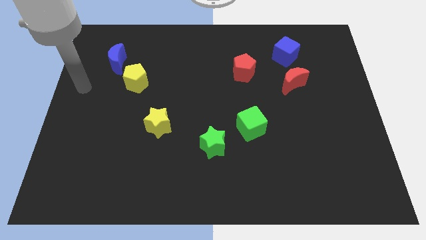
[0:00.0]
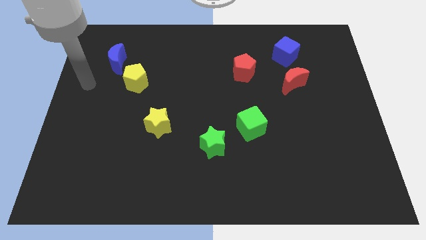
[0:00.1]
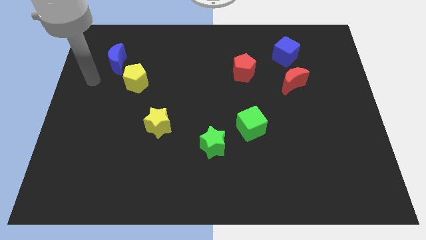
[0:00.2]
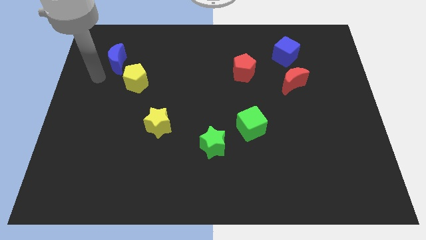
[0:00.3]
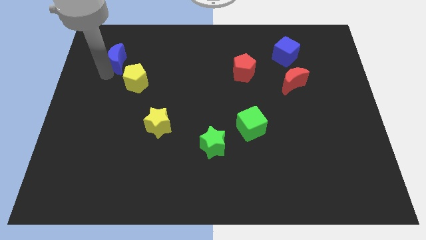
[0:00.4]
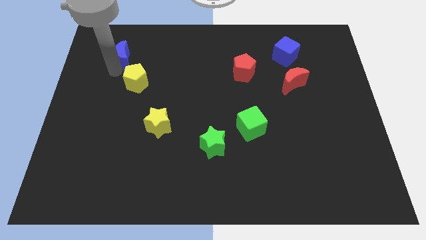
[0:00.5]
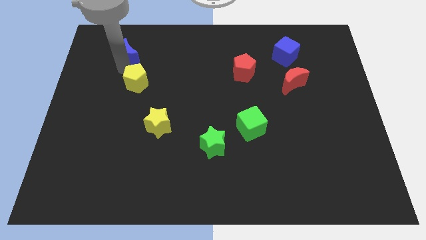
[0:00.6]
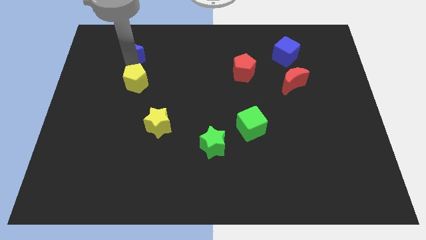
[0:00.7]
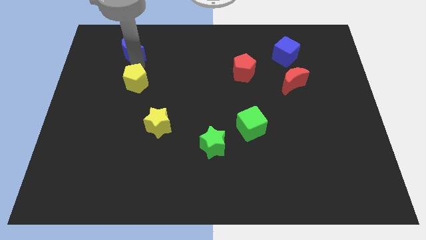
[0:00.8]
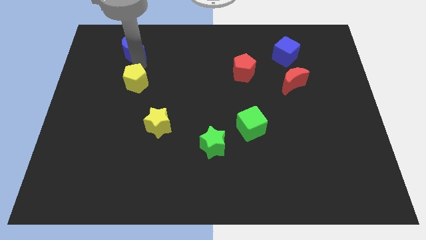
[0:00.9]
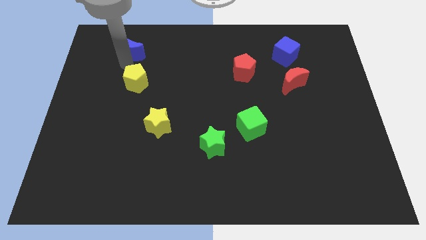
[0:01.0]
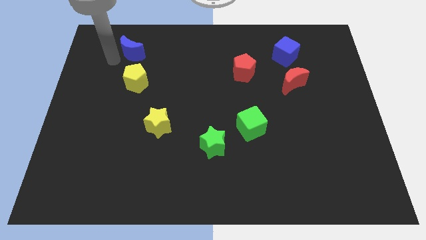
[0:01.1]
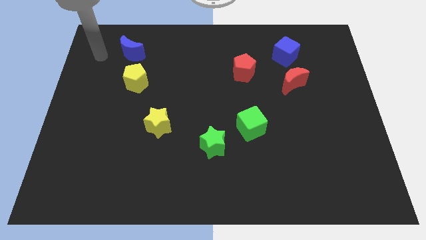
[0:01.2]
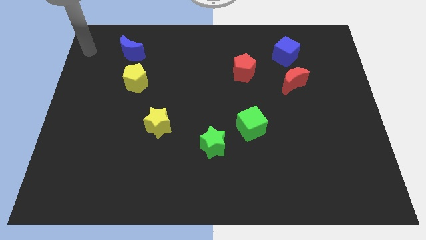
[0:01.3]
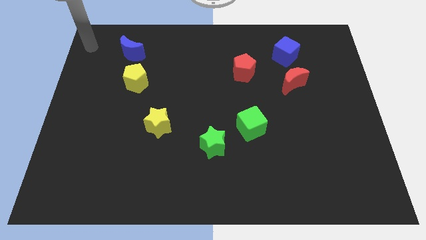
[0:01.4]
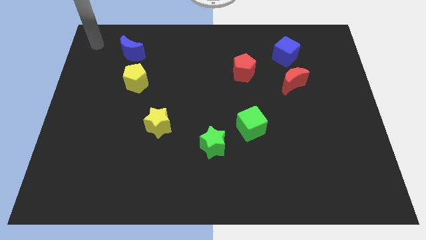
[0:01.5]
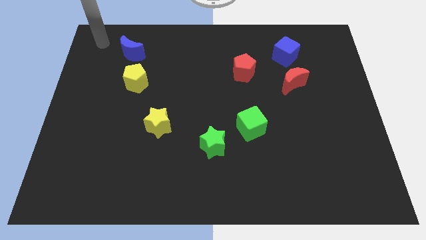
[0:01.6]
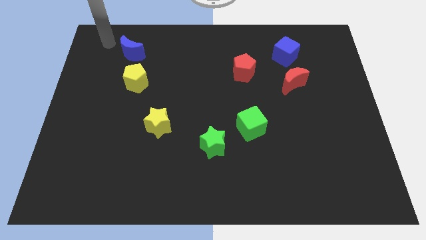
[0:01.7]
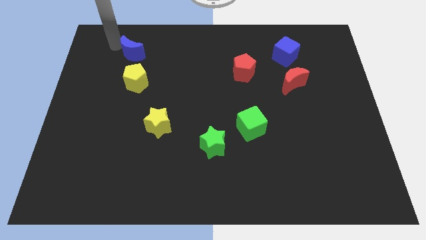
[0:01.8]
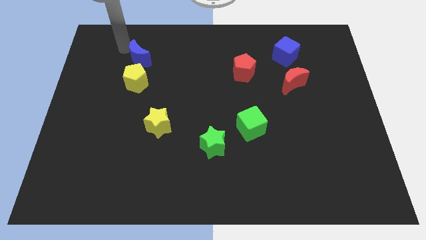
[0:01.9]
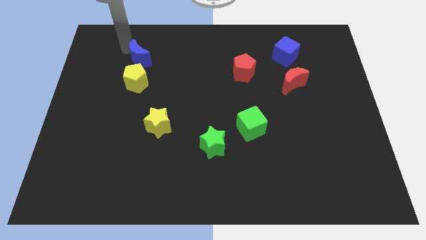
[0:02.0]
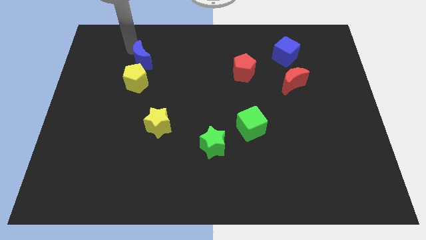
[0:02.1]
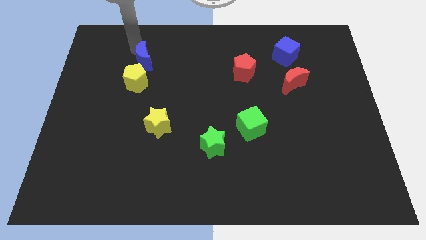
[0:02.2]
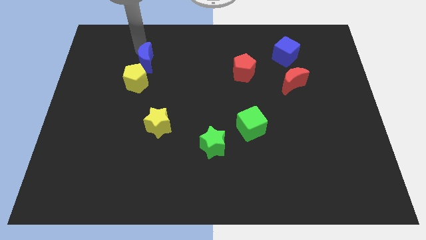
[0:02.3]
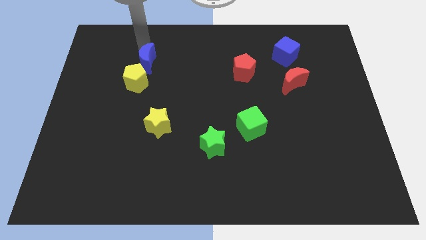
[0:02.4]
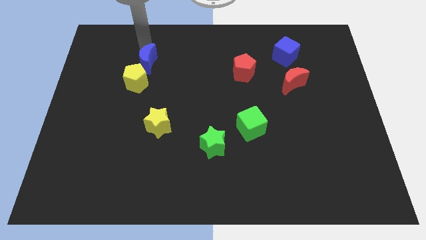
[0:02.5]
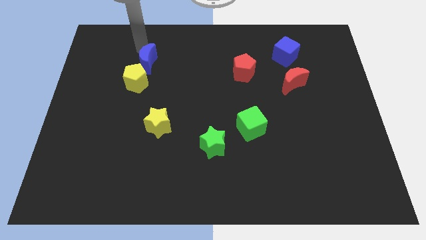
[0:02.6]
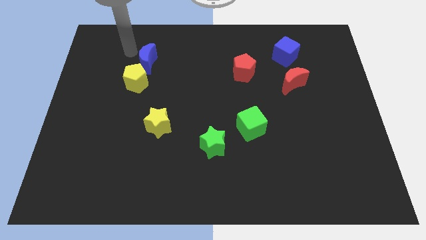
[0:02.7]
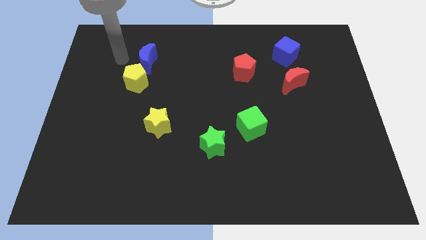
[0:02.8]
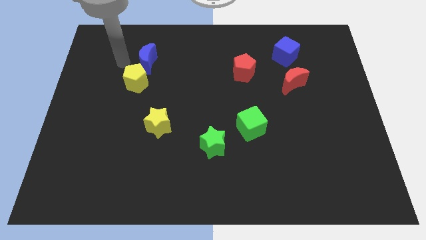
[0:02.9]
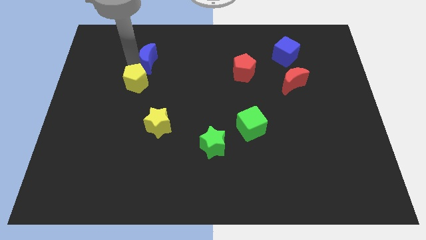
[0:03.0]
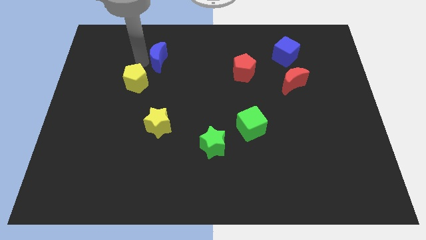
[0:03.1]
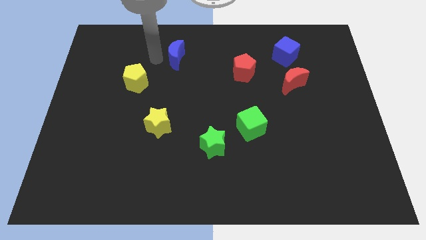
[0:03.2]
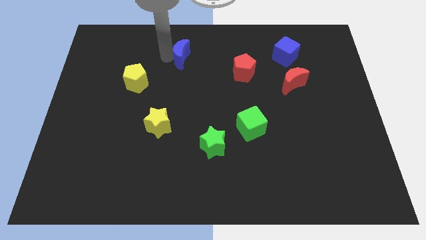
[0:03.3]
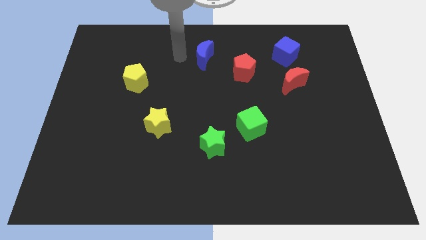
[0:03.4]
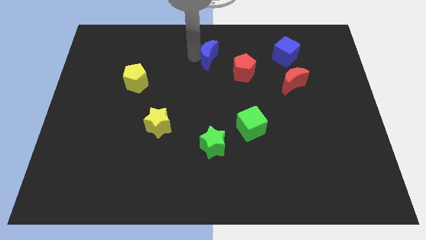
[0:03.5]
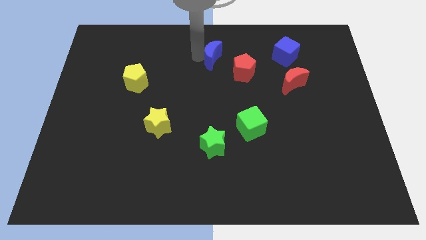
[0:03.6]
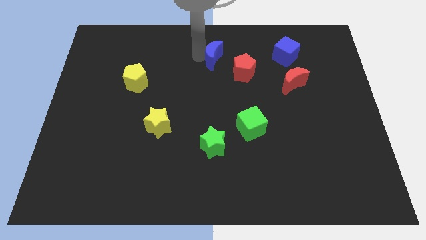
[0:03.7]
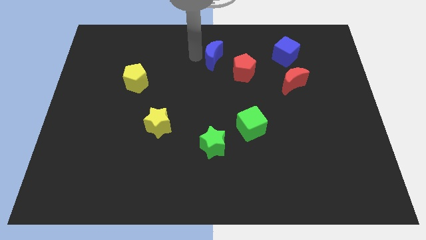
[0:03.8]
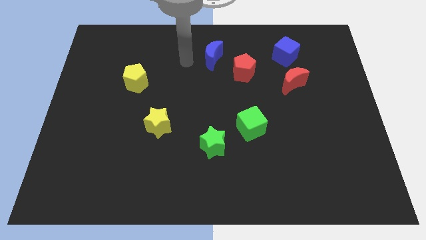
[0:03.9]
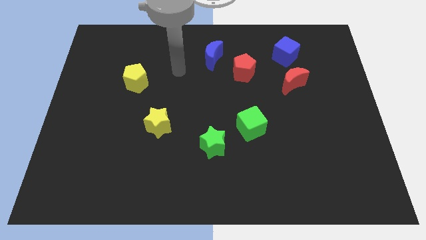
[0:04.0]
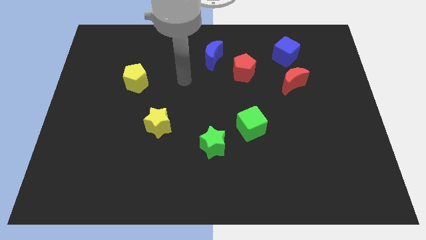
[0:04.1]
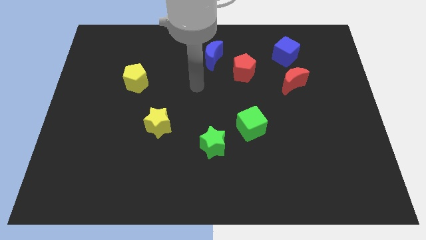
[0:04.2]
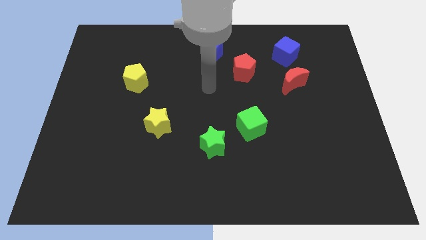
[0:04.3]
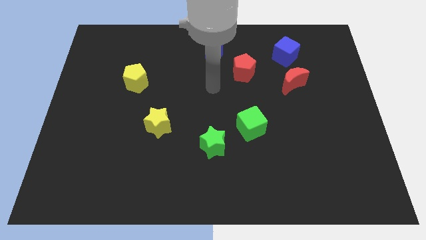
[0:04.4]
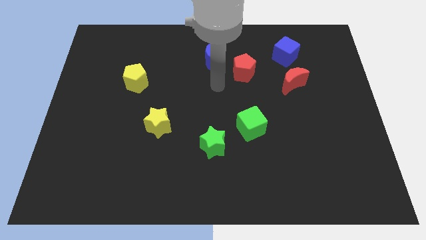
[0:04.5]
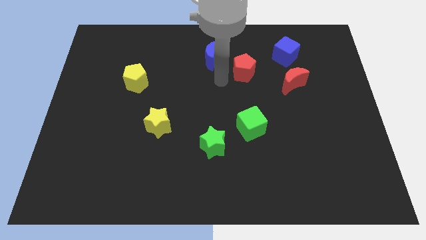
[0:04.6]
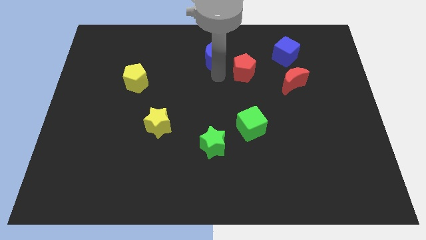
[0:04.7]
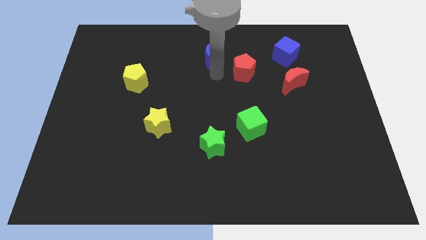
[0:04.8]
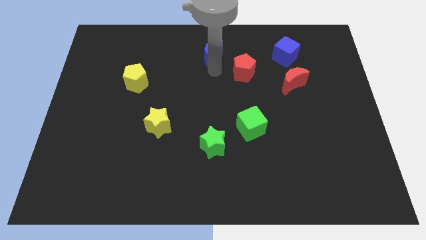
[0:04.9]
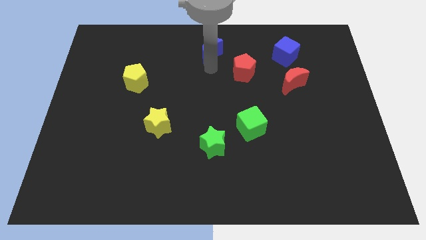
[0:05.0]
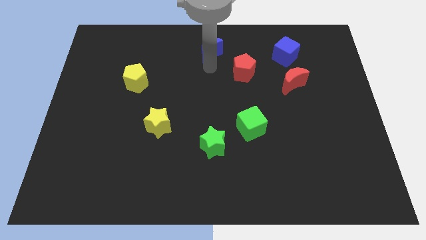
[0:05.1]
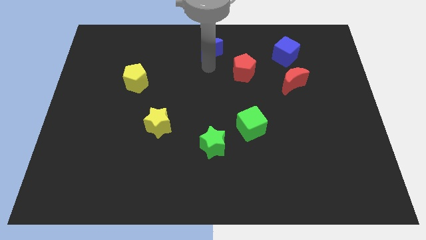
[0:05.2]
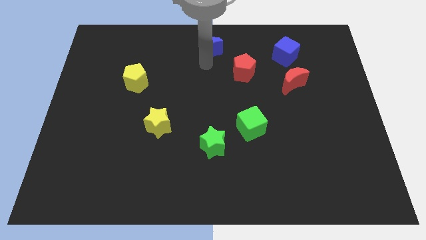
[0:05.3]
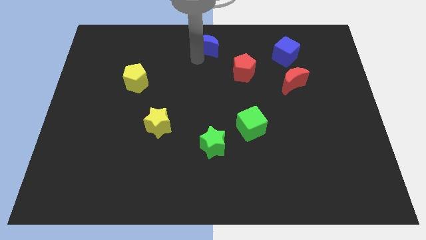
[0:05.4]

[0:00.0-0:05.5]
place the blue moon left to the blue cube

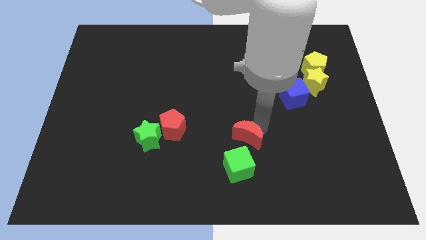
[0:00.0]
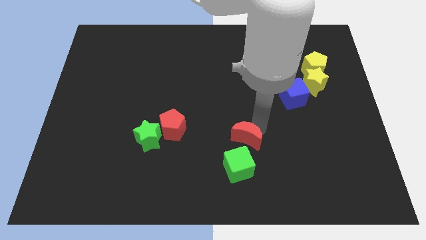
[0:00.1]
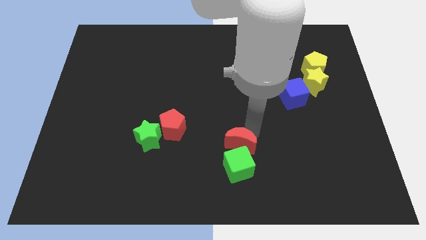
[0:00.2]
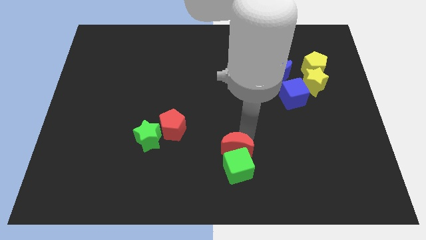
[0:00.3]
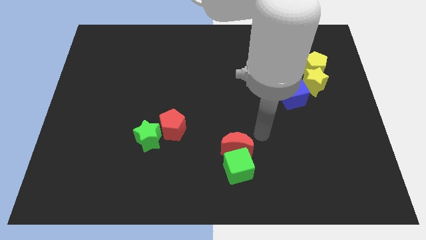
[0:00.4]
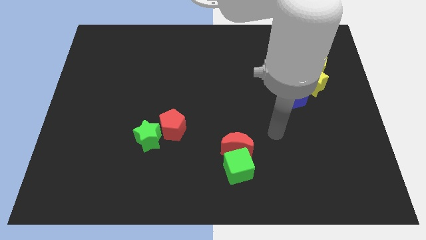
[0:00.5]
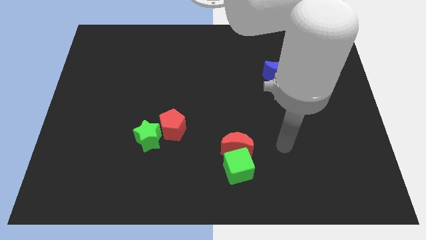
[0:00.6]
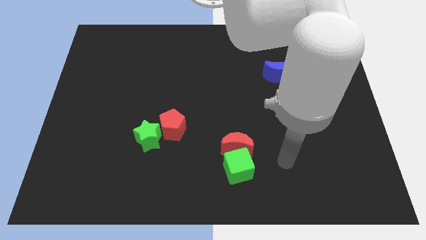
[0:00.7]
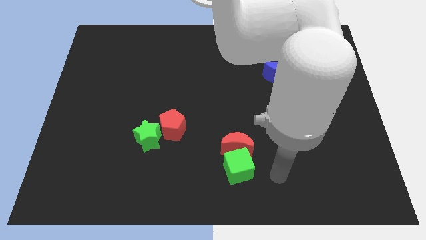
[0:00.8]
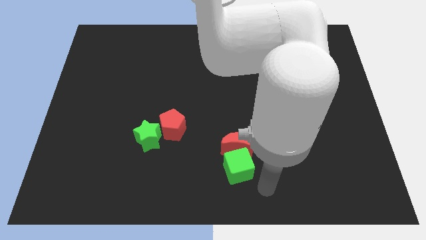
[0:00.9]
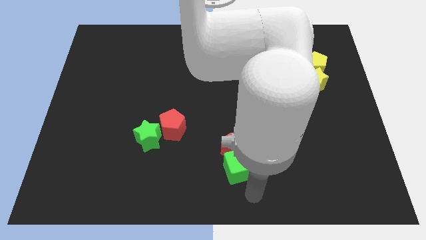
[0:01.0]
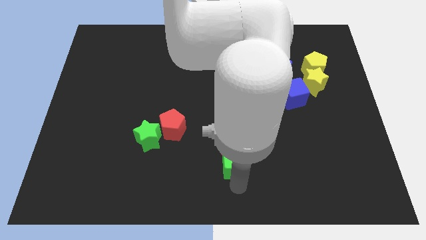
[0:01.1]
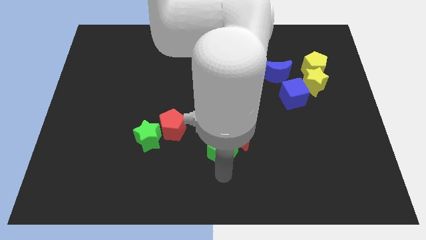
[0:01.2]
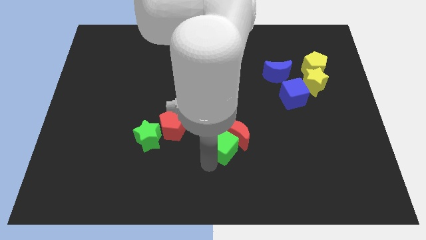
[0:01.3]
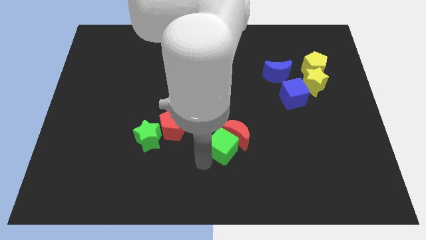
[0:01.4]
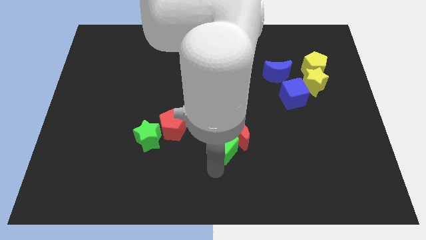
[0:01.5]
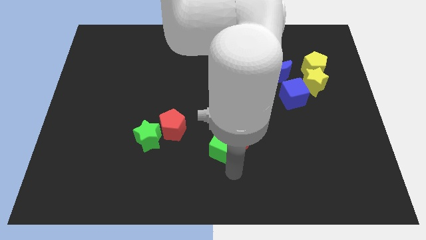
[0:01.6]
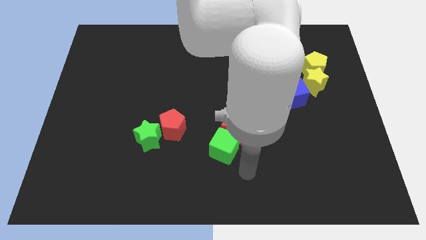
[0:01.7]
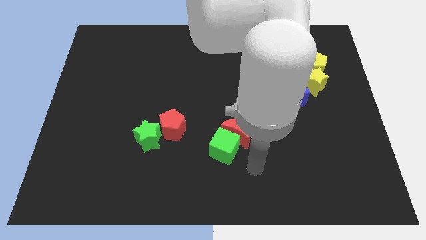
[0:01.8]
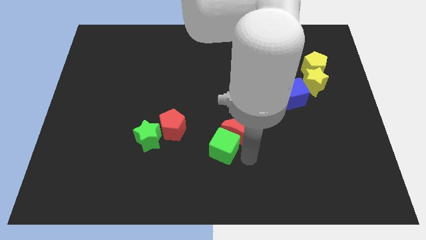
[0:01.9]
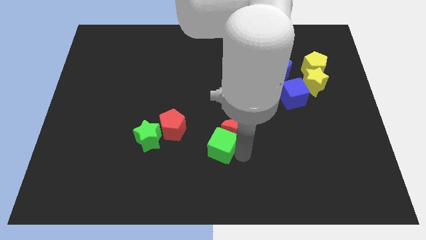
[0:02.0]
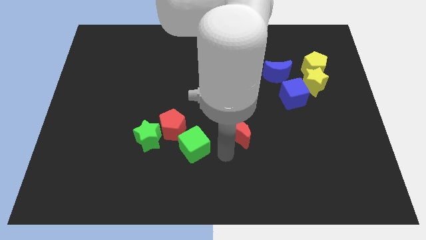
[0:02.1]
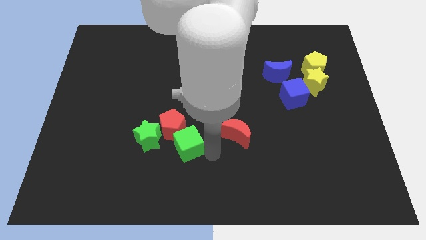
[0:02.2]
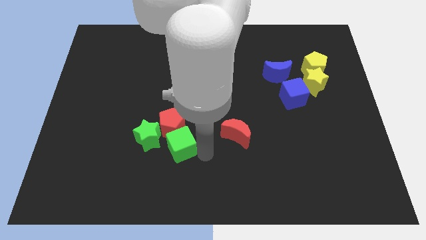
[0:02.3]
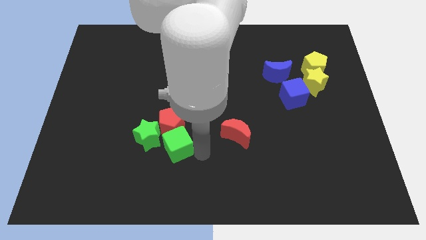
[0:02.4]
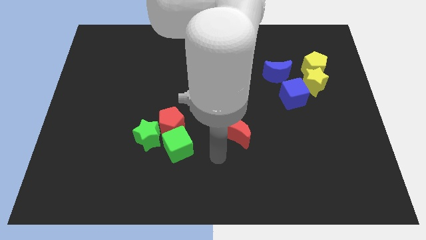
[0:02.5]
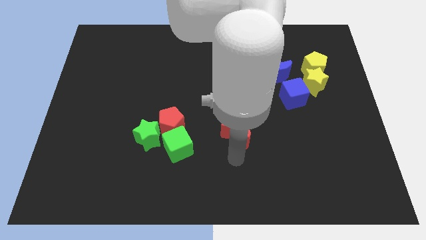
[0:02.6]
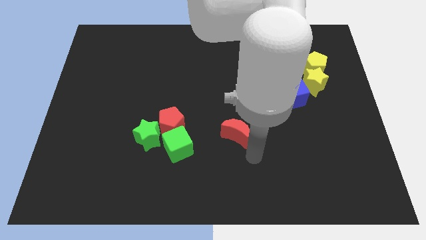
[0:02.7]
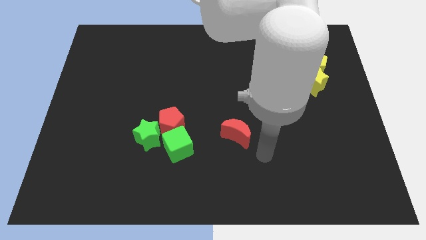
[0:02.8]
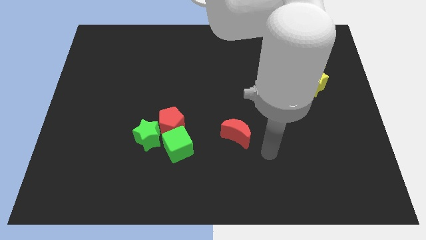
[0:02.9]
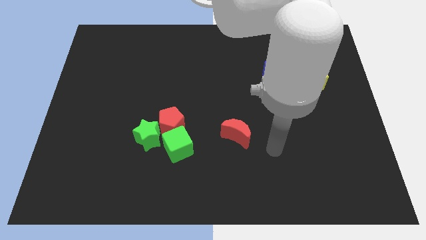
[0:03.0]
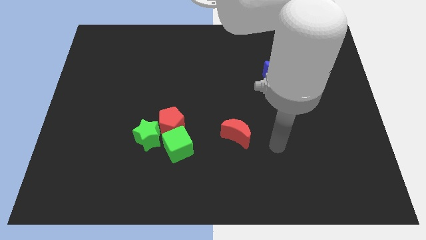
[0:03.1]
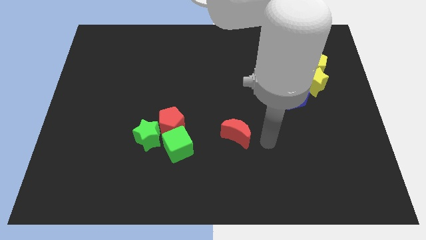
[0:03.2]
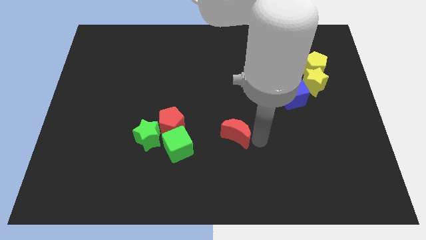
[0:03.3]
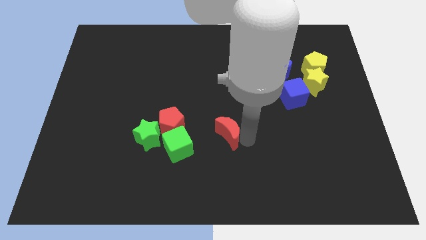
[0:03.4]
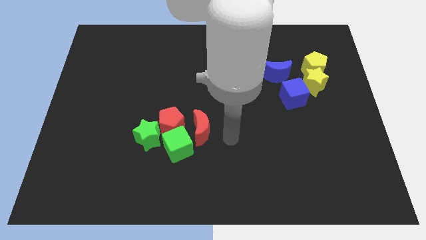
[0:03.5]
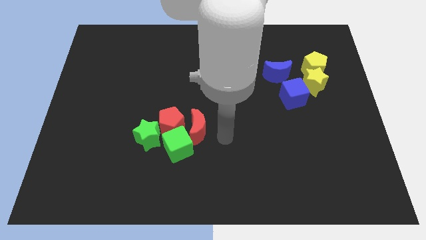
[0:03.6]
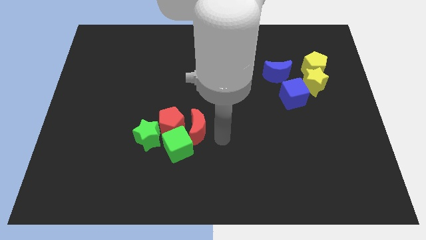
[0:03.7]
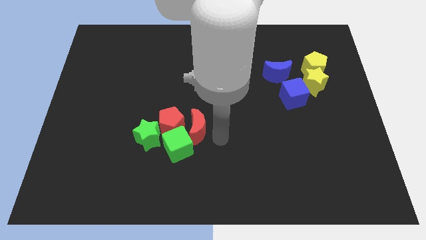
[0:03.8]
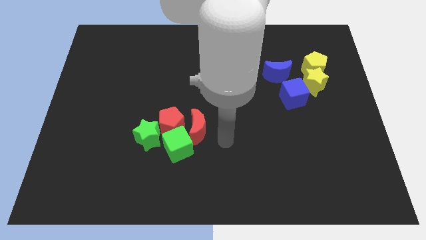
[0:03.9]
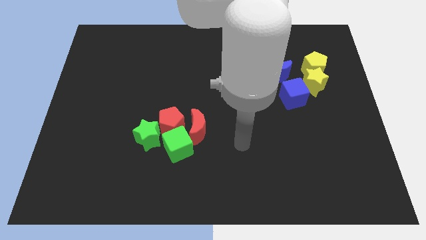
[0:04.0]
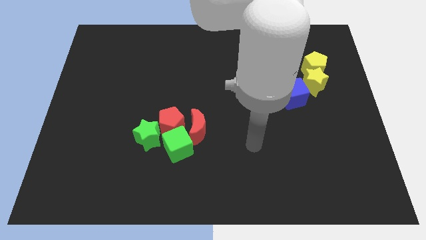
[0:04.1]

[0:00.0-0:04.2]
add red moon and green cube into red pentagon
